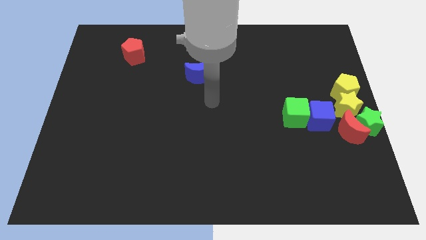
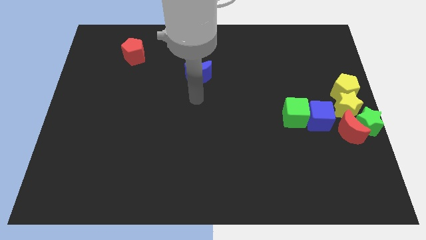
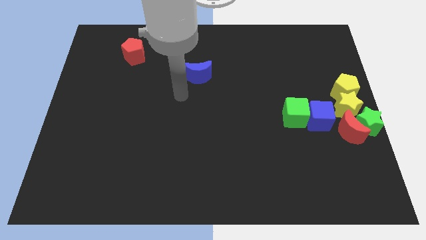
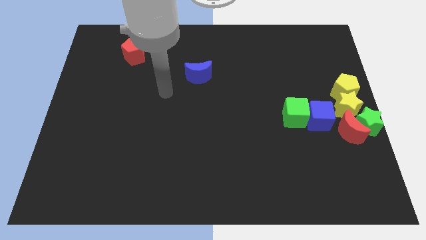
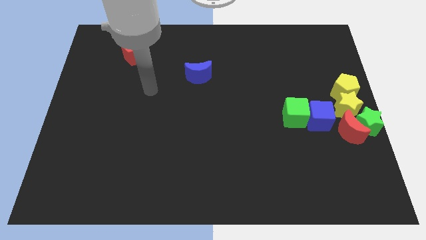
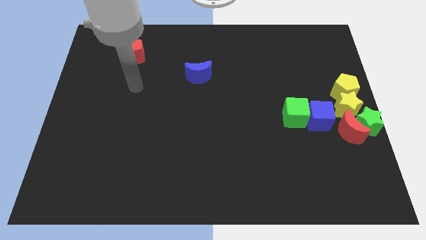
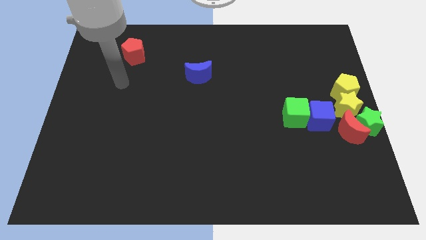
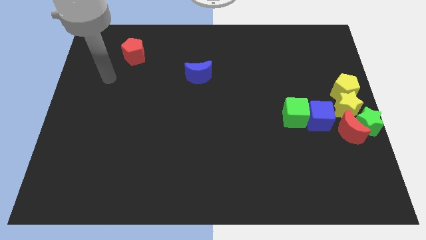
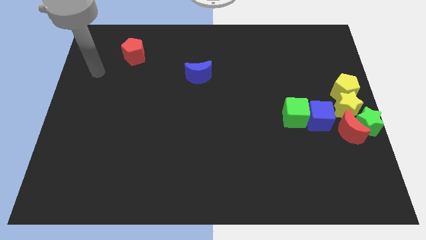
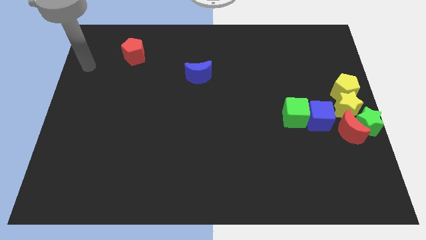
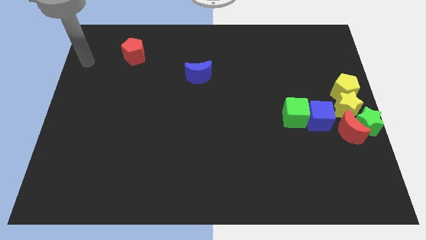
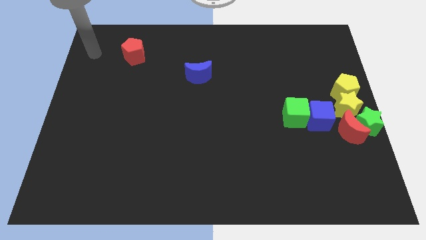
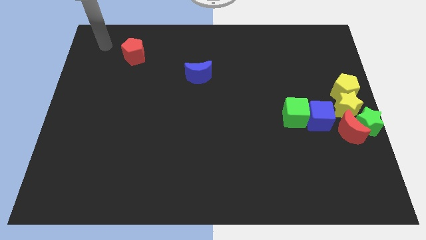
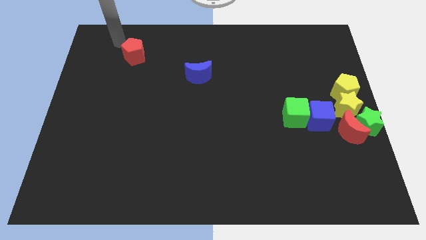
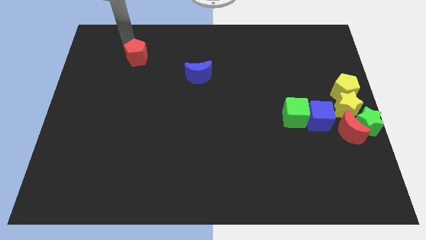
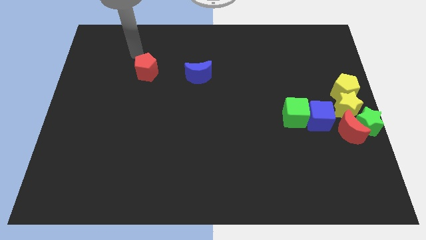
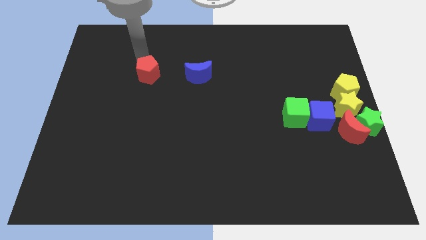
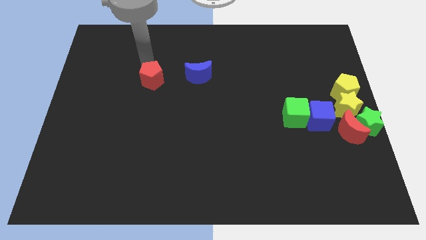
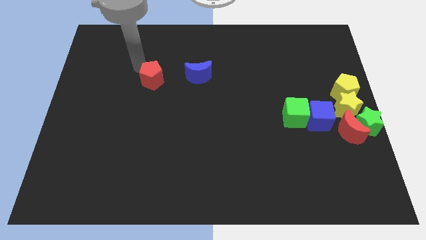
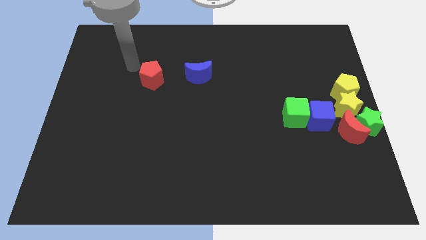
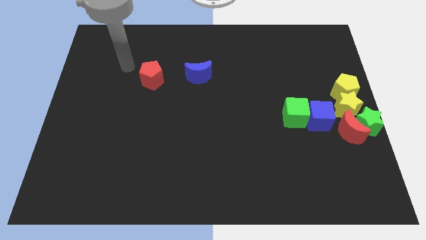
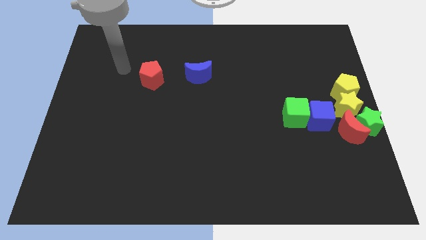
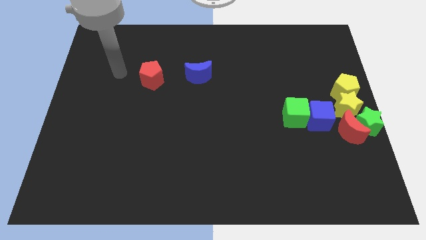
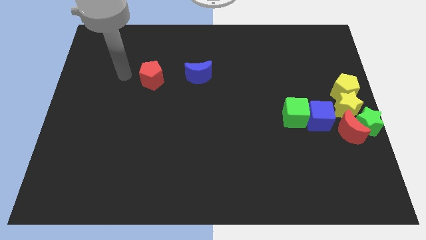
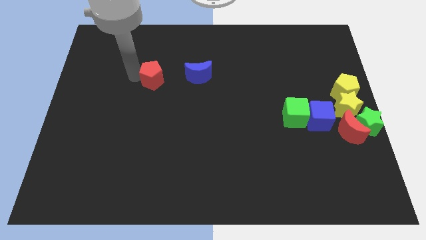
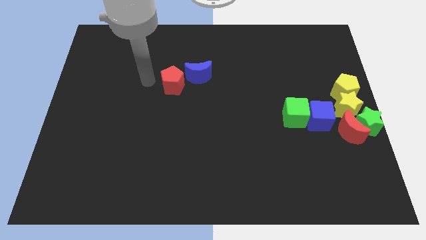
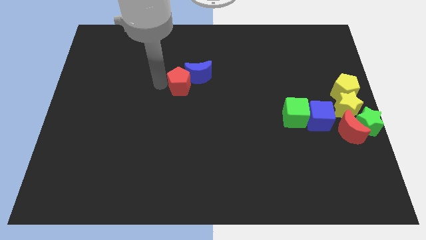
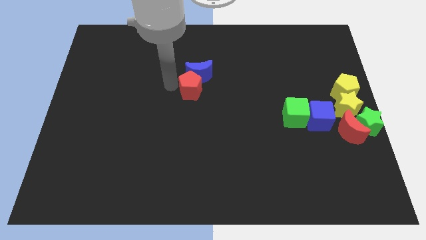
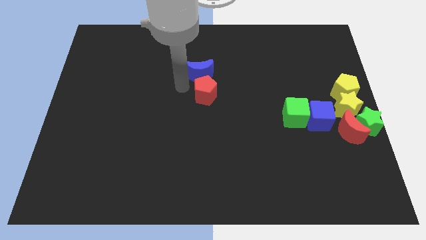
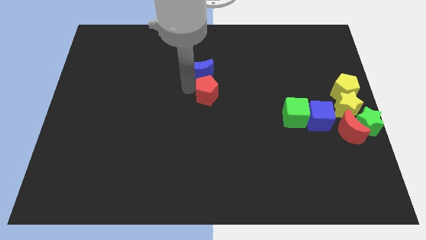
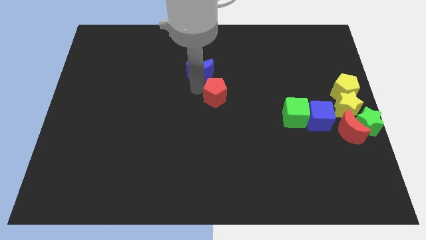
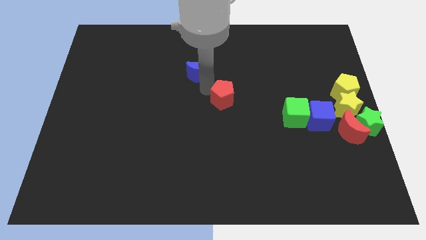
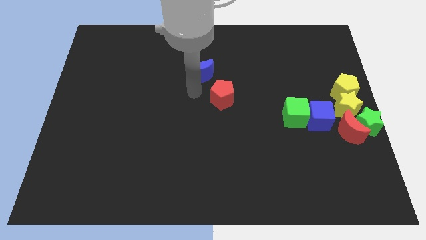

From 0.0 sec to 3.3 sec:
move red pentagon right below the blue moon

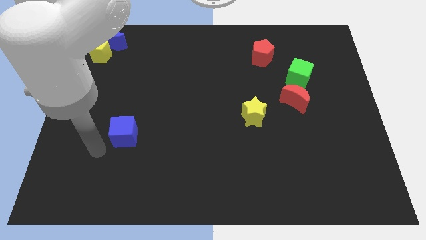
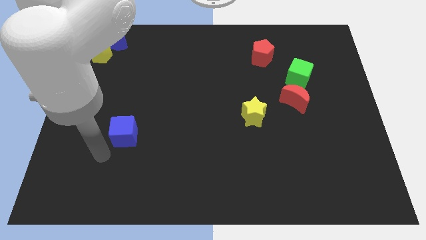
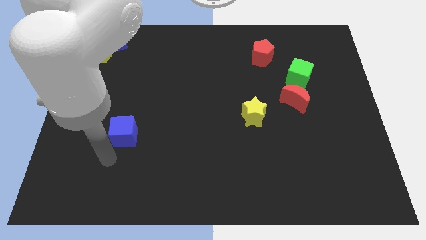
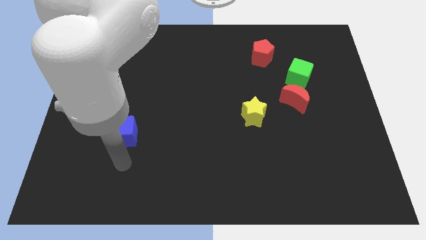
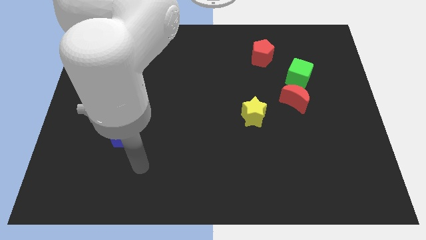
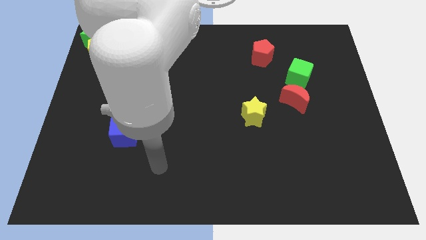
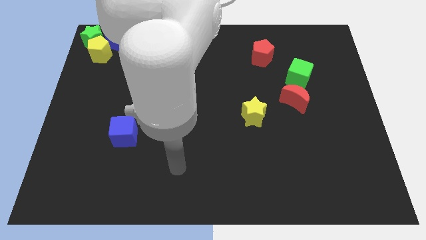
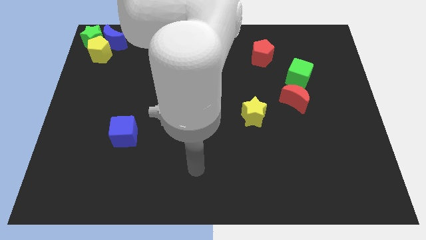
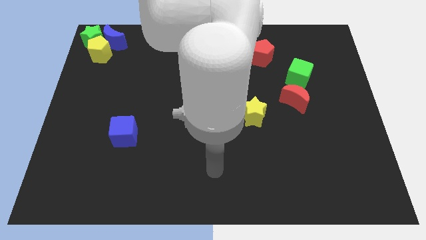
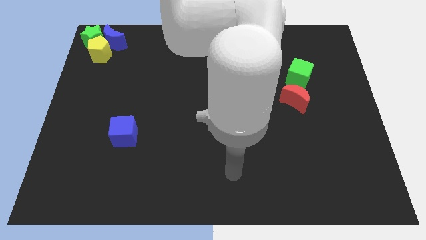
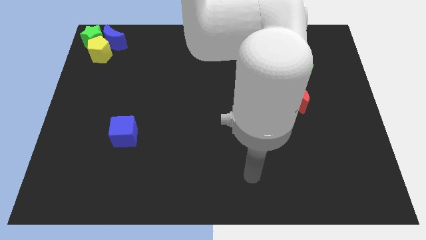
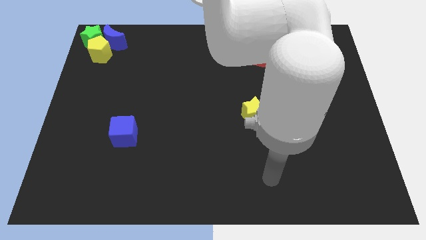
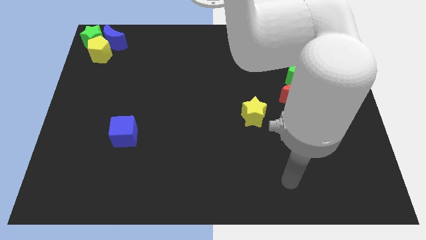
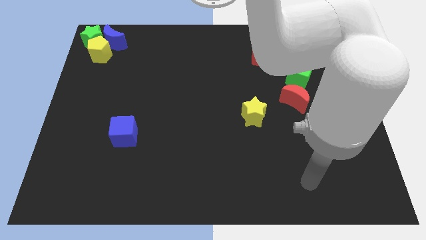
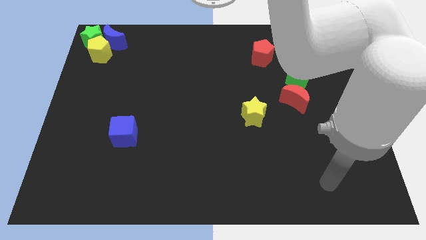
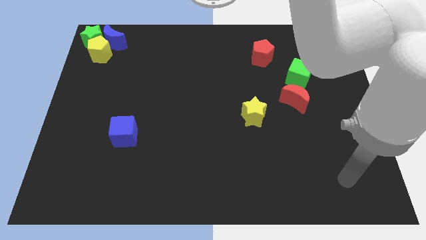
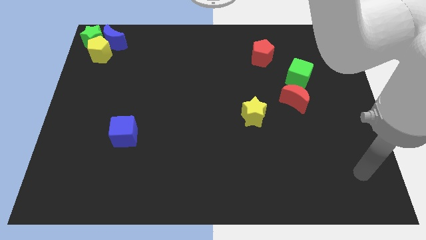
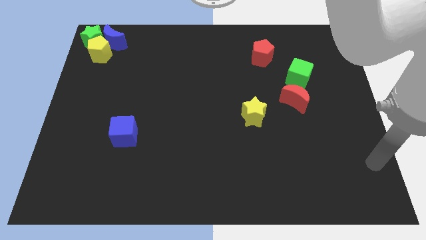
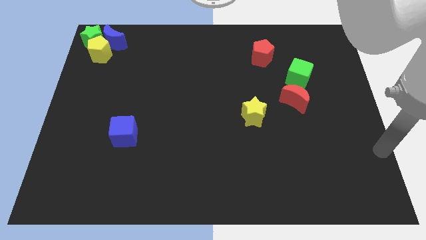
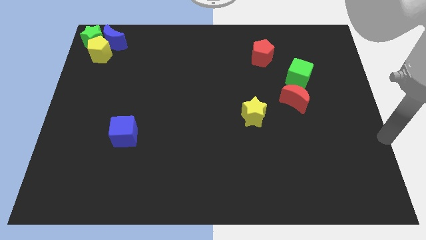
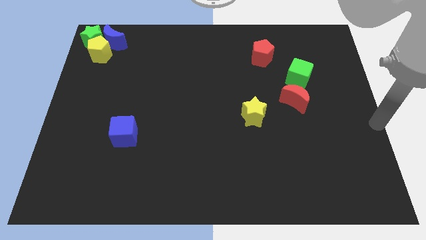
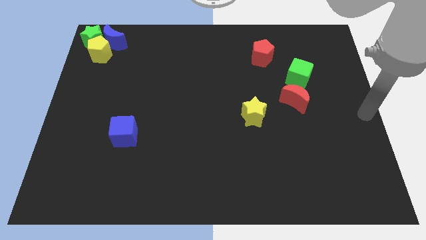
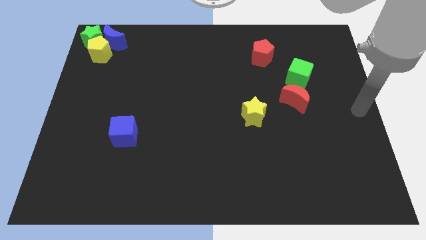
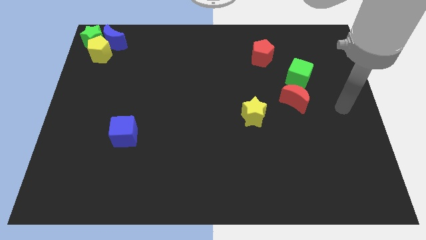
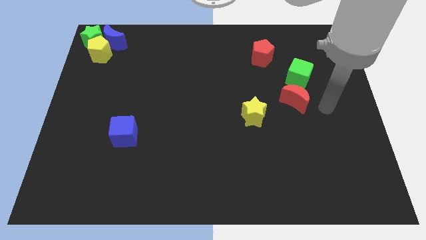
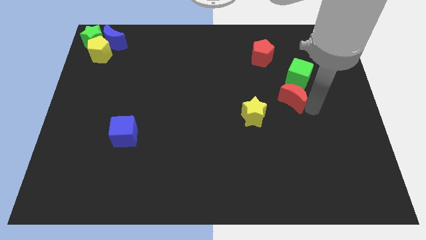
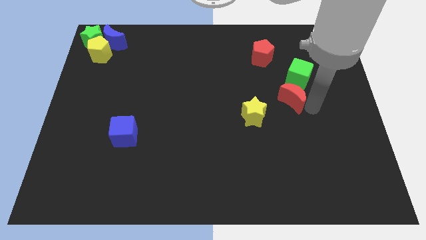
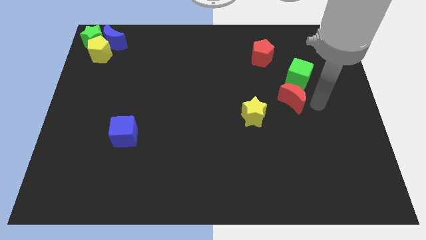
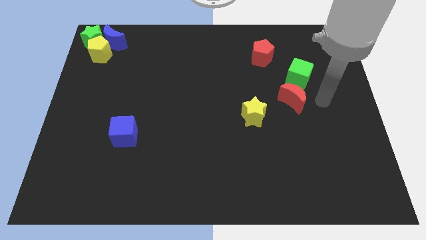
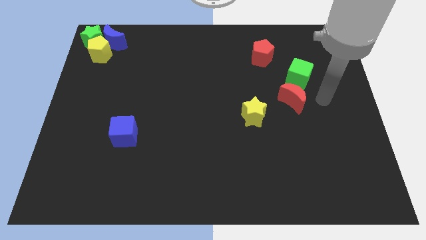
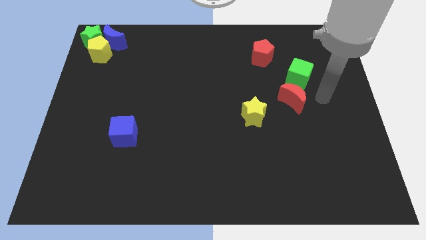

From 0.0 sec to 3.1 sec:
place your arm to the right of red moon

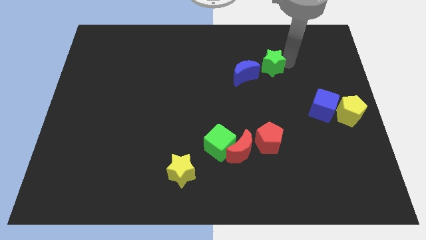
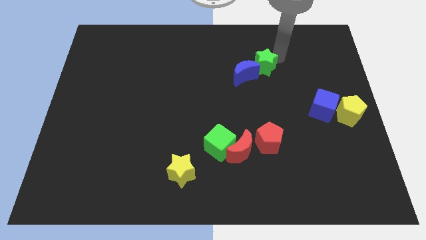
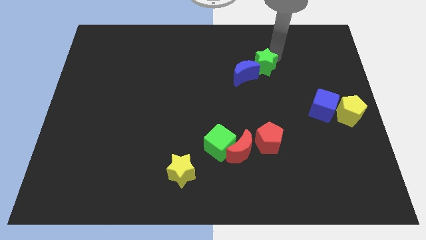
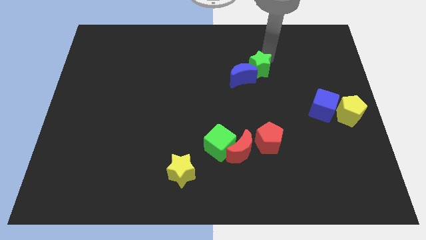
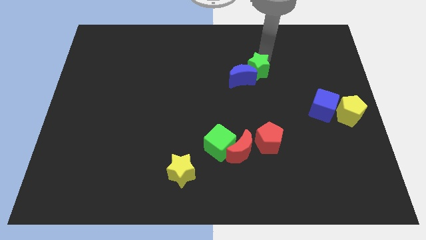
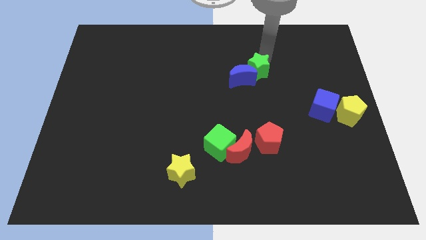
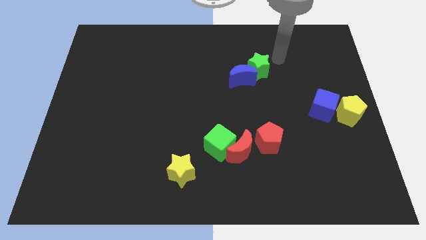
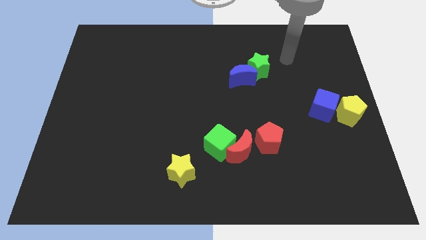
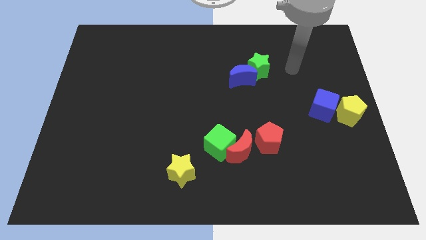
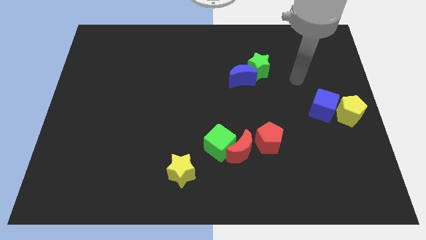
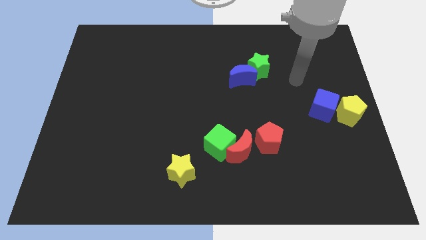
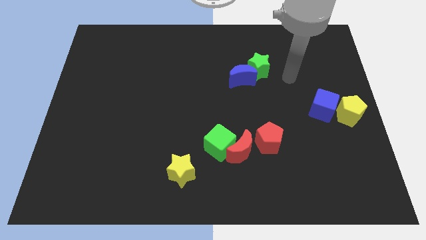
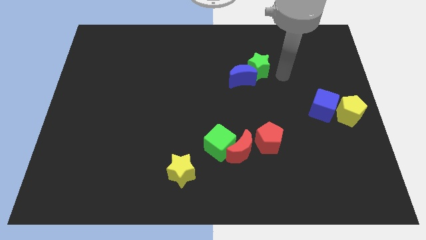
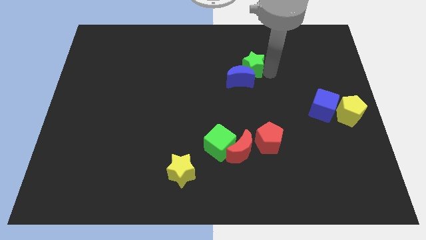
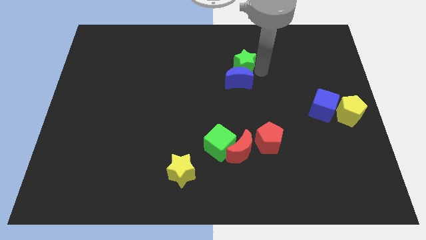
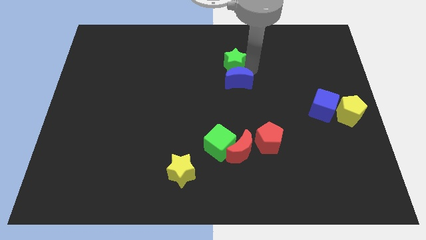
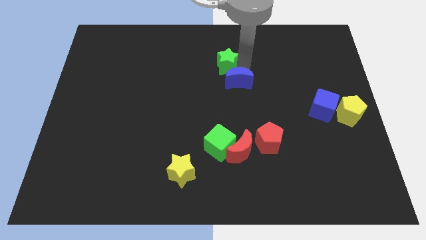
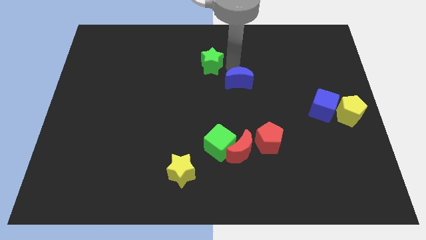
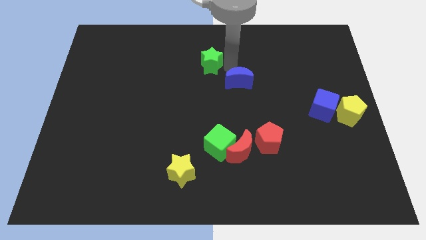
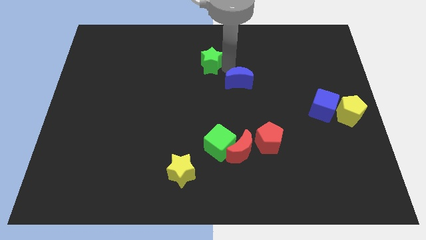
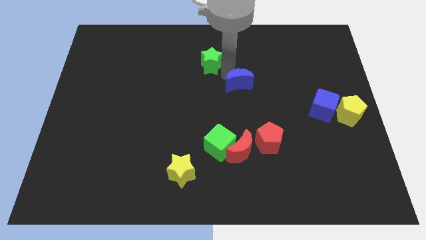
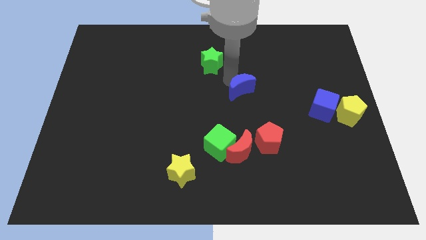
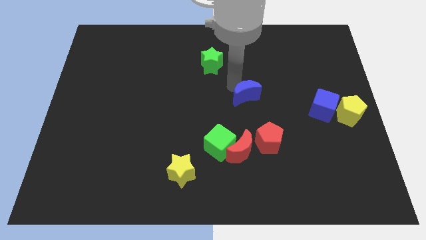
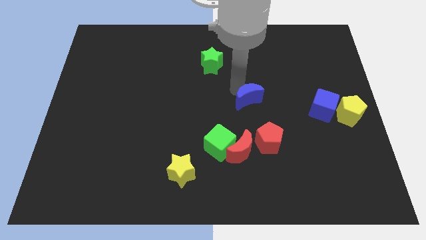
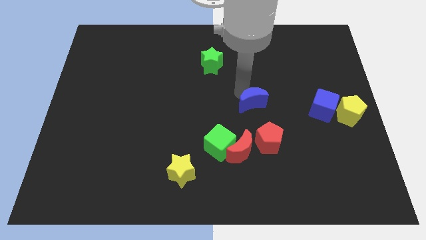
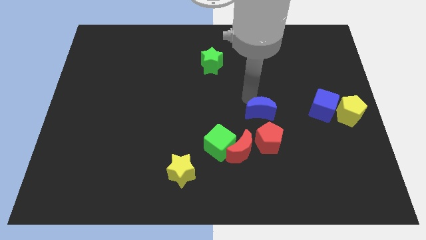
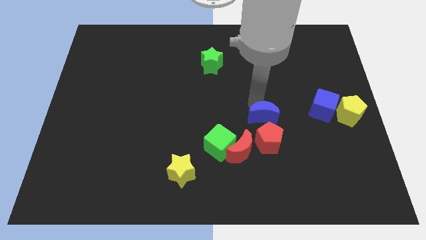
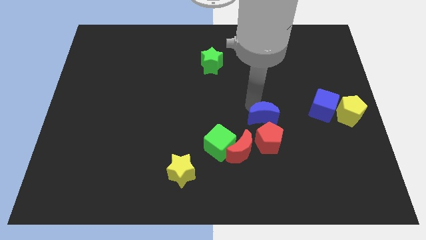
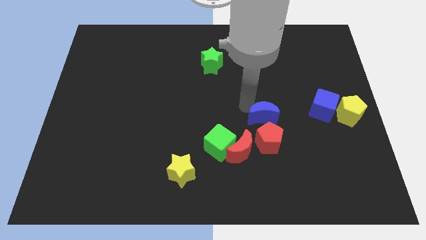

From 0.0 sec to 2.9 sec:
separate blue crescent from green star
